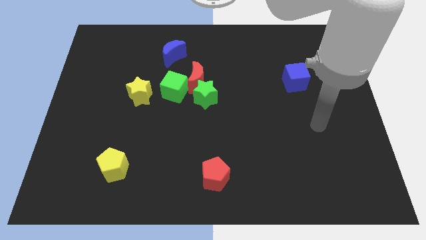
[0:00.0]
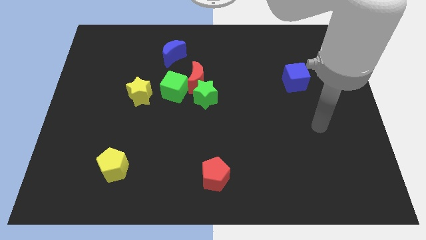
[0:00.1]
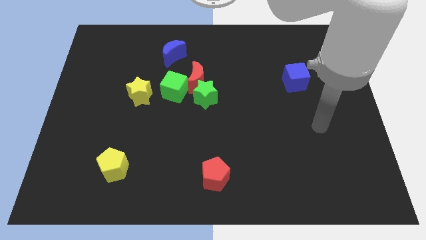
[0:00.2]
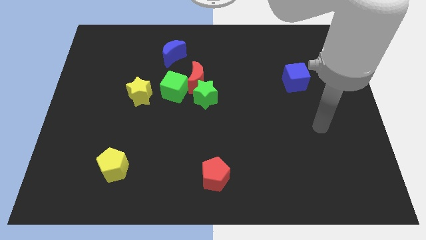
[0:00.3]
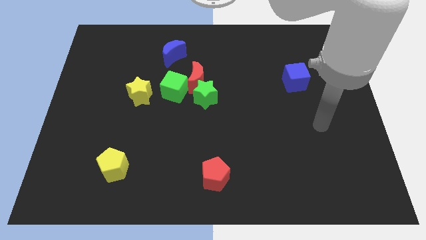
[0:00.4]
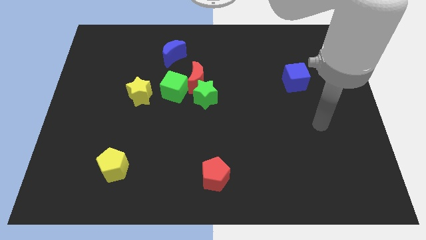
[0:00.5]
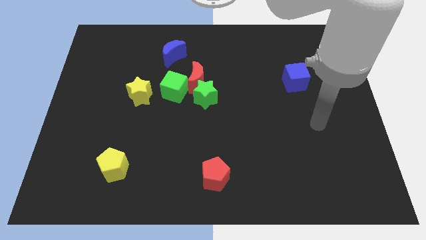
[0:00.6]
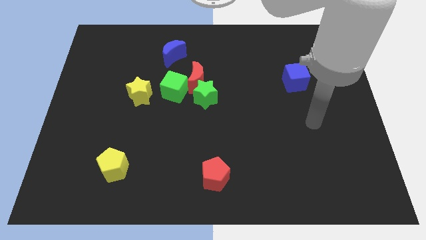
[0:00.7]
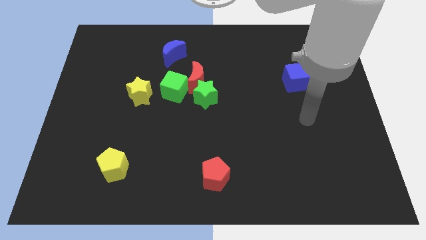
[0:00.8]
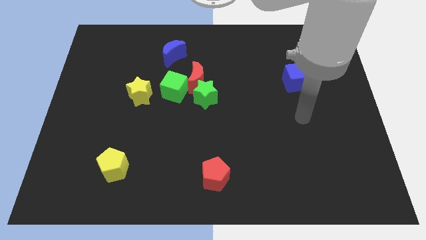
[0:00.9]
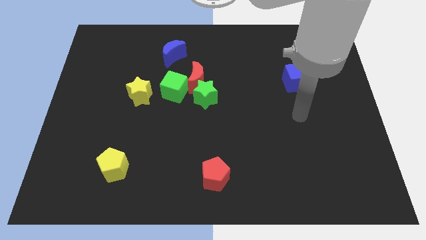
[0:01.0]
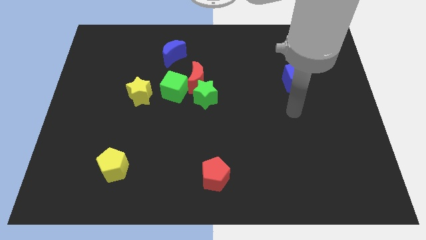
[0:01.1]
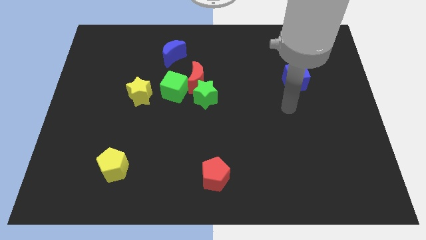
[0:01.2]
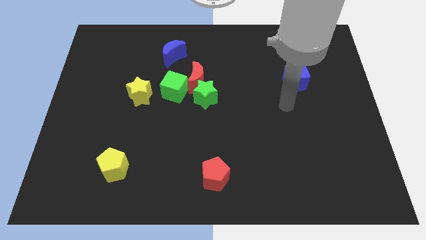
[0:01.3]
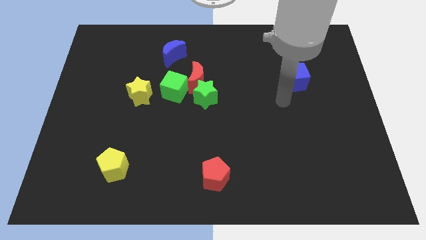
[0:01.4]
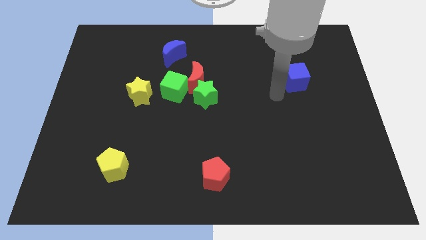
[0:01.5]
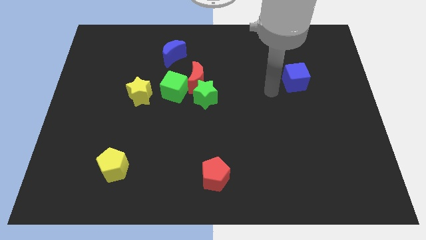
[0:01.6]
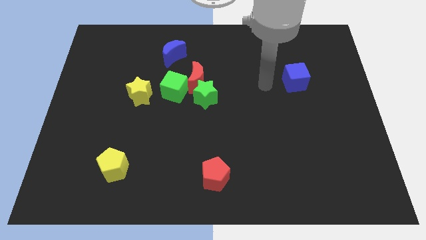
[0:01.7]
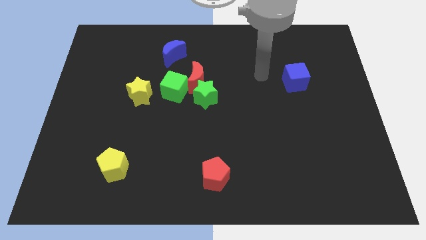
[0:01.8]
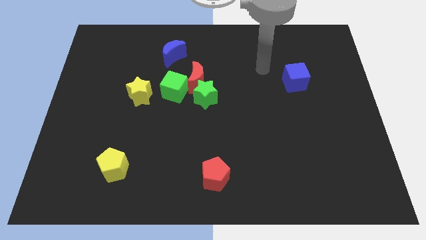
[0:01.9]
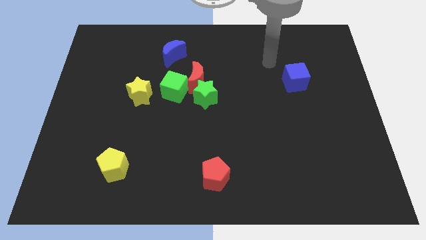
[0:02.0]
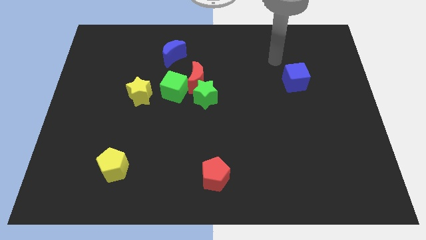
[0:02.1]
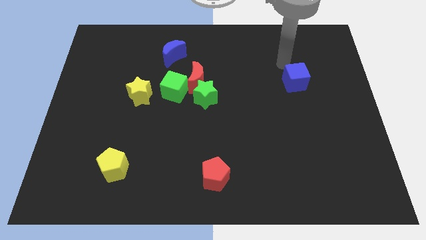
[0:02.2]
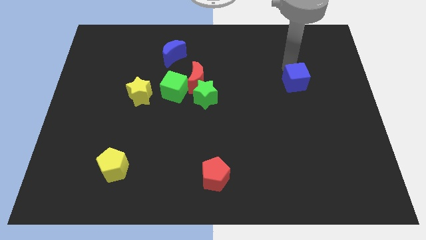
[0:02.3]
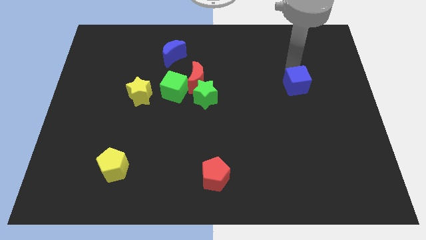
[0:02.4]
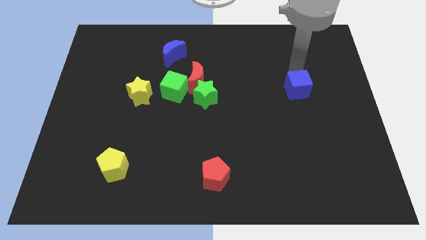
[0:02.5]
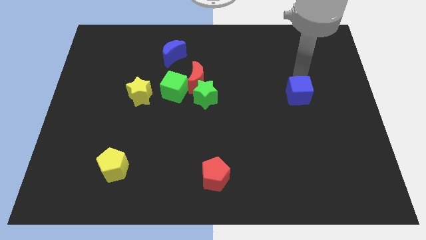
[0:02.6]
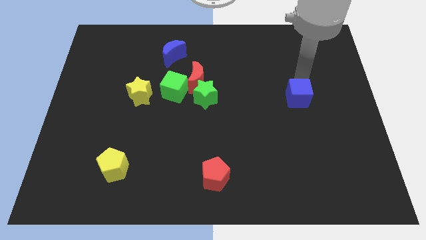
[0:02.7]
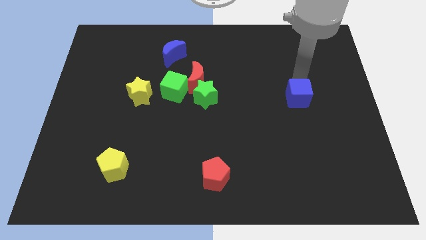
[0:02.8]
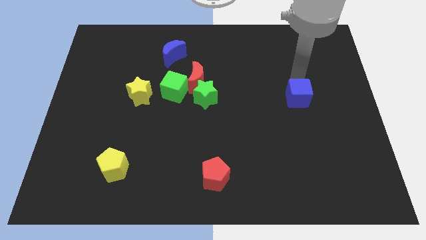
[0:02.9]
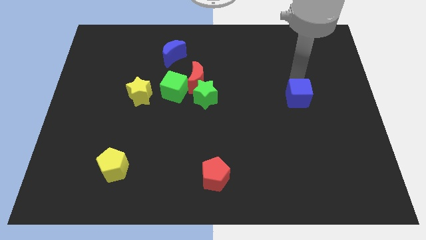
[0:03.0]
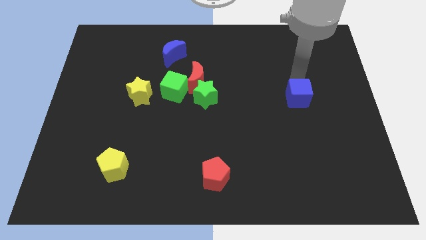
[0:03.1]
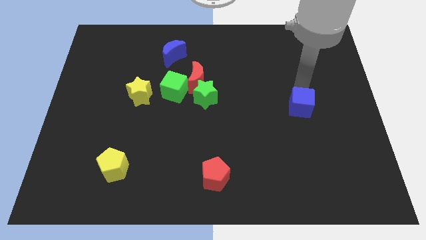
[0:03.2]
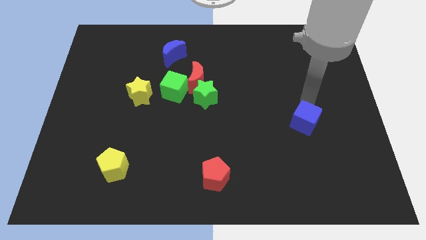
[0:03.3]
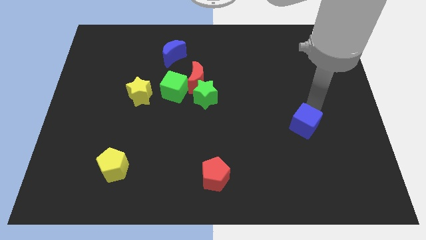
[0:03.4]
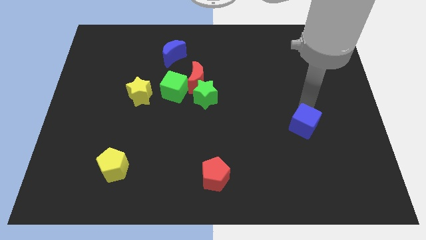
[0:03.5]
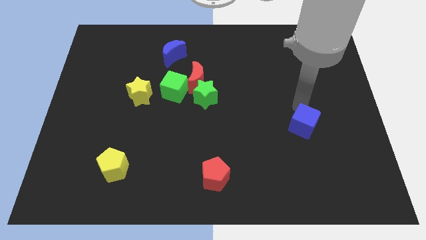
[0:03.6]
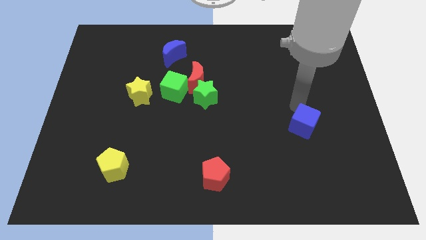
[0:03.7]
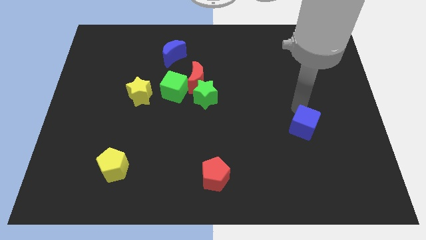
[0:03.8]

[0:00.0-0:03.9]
slightly push the blue cube towards the bottom of the board

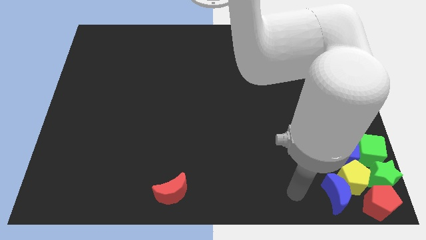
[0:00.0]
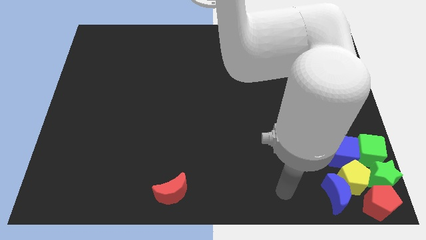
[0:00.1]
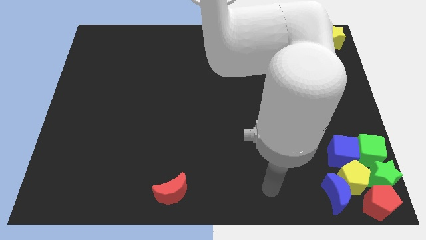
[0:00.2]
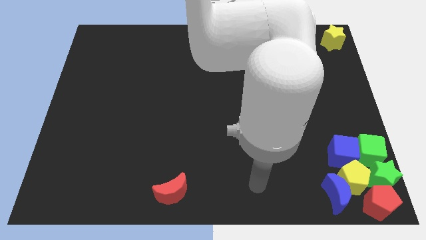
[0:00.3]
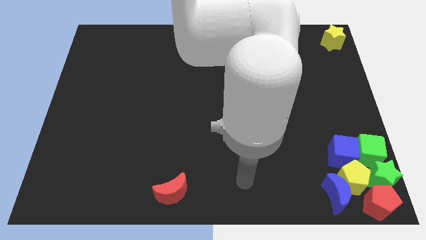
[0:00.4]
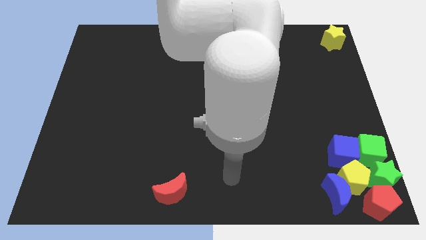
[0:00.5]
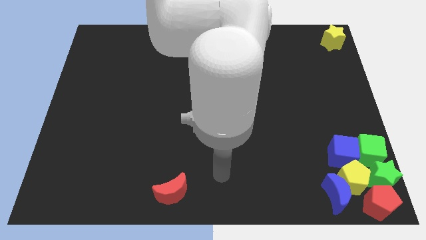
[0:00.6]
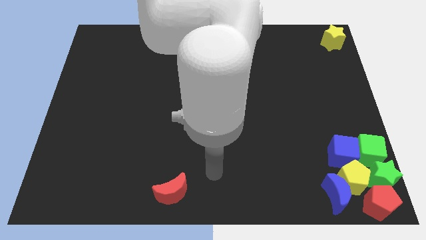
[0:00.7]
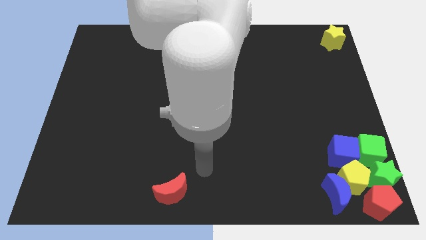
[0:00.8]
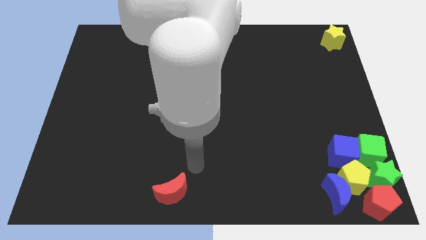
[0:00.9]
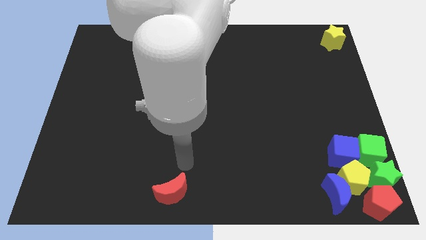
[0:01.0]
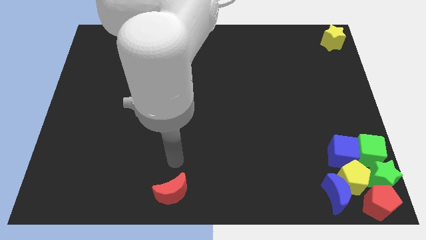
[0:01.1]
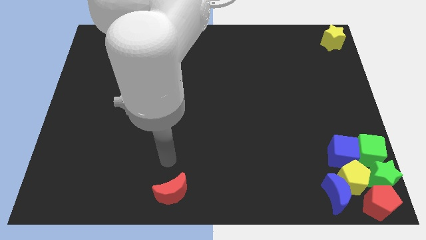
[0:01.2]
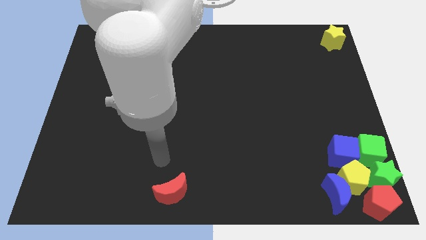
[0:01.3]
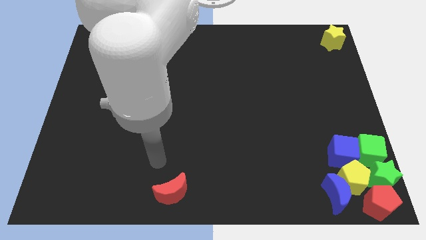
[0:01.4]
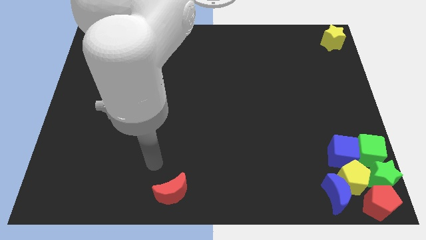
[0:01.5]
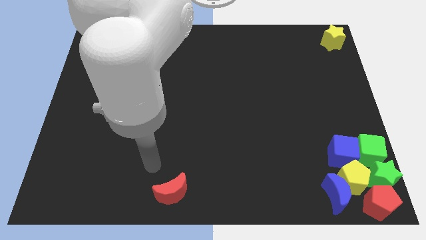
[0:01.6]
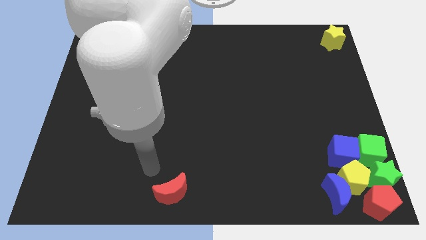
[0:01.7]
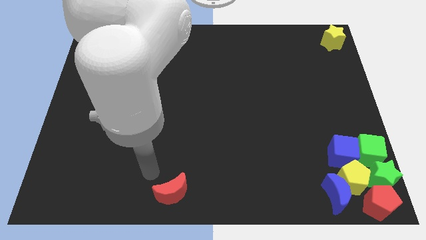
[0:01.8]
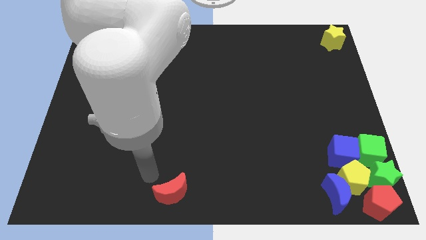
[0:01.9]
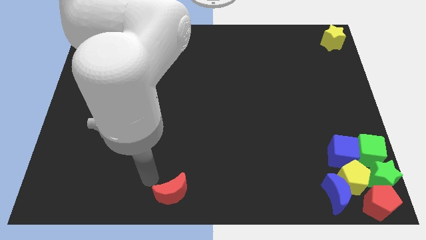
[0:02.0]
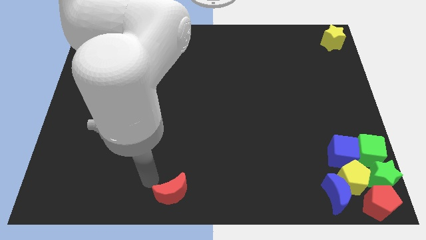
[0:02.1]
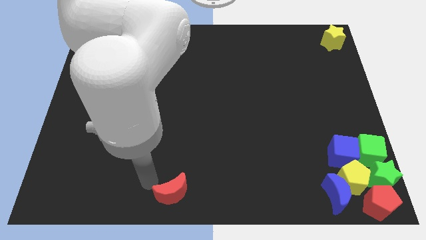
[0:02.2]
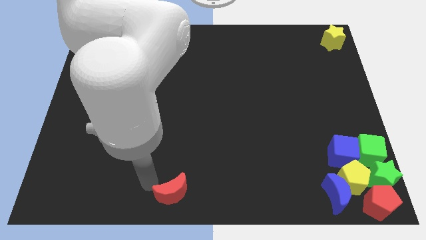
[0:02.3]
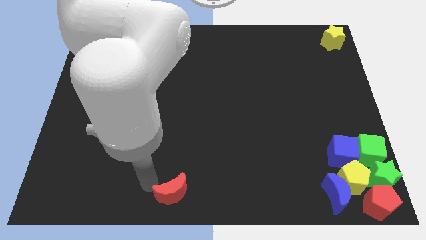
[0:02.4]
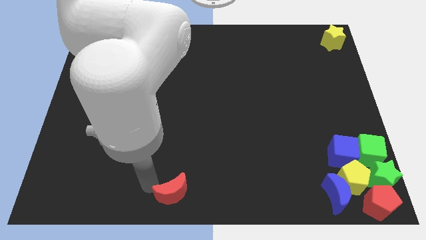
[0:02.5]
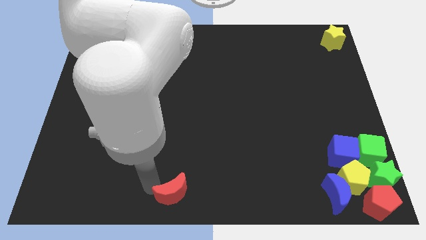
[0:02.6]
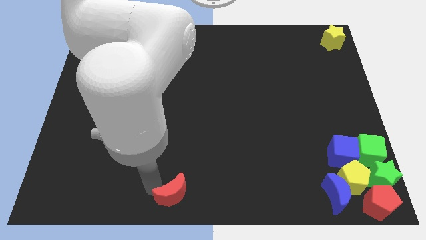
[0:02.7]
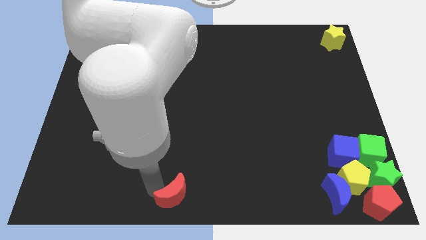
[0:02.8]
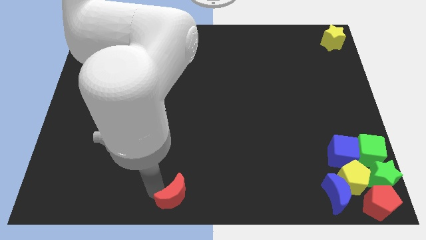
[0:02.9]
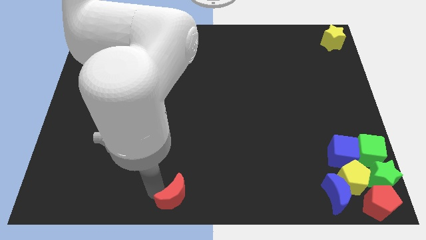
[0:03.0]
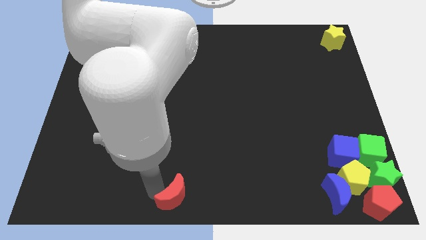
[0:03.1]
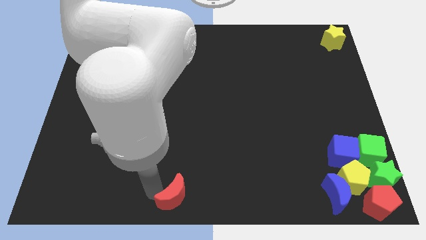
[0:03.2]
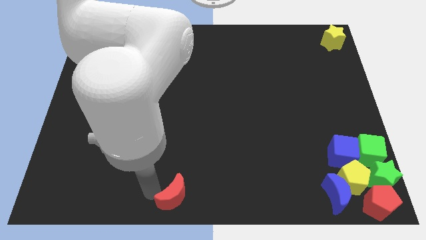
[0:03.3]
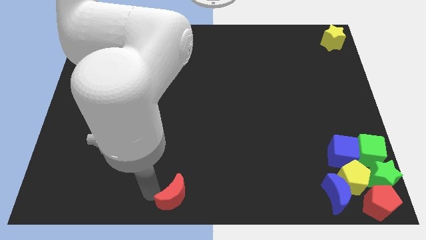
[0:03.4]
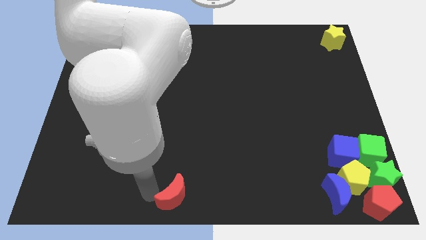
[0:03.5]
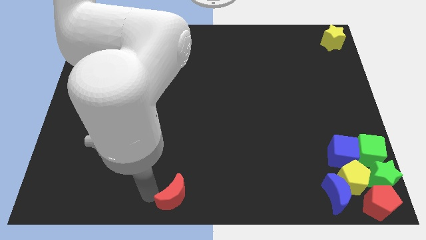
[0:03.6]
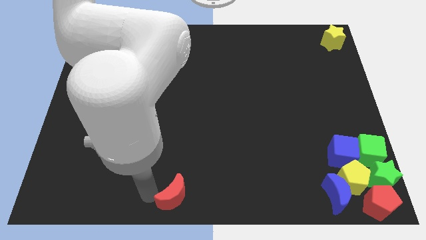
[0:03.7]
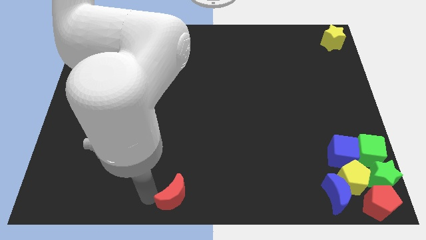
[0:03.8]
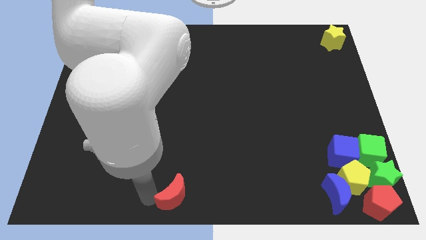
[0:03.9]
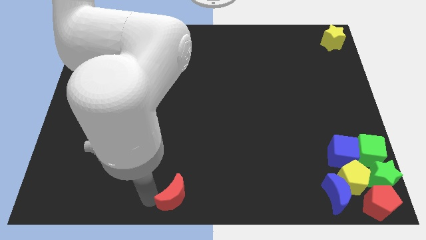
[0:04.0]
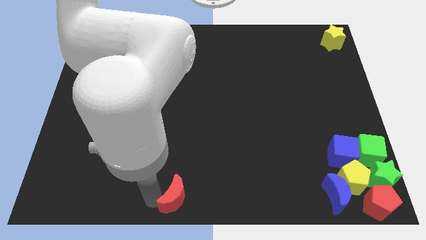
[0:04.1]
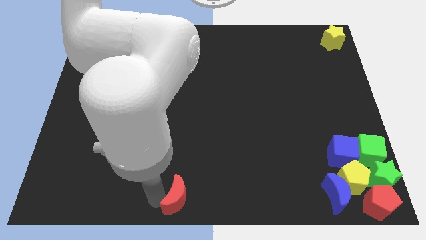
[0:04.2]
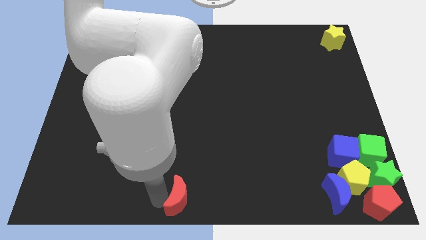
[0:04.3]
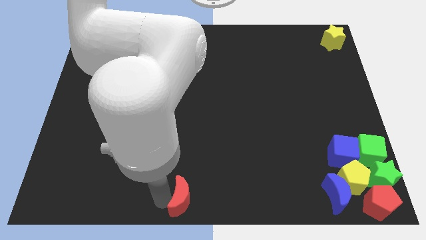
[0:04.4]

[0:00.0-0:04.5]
slightly push the red moon at the bottom center

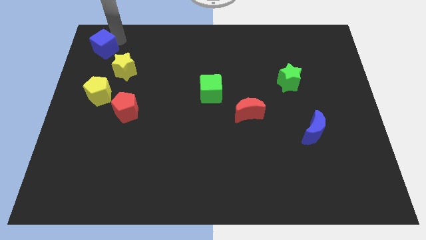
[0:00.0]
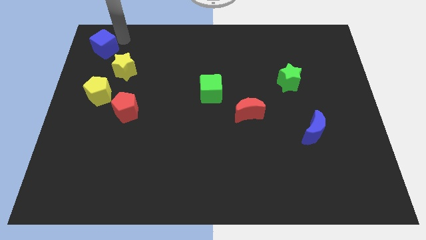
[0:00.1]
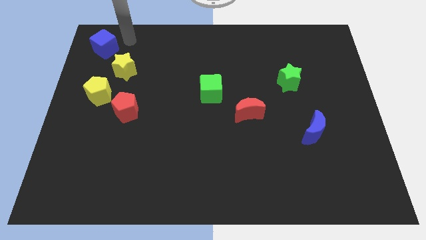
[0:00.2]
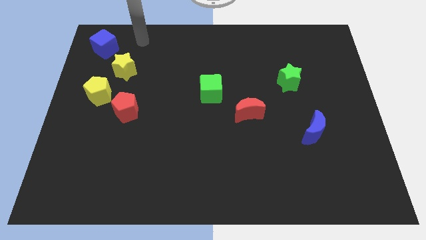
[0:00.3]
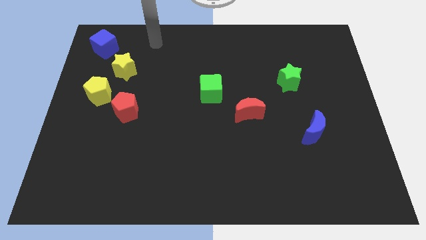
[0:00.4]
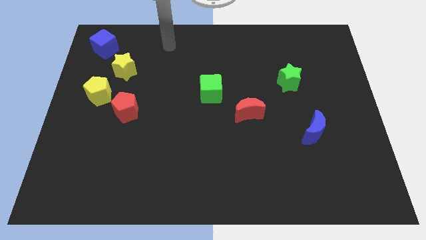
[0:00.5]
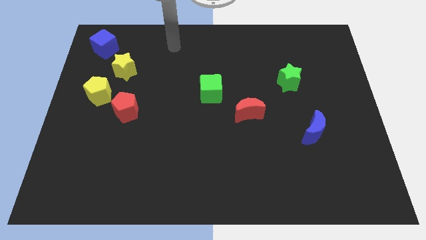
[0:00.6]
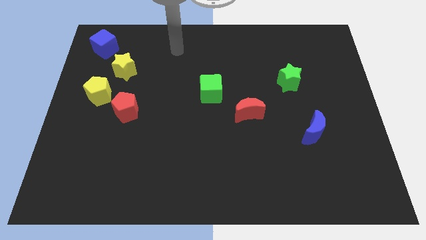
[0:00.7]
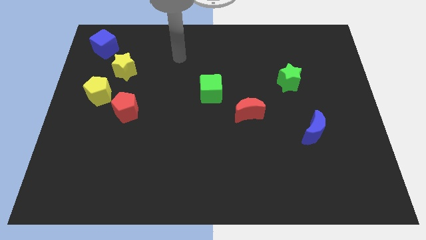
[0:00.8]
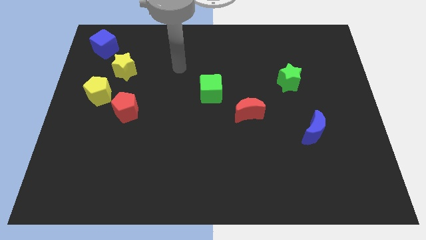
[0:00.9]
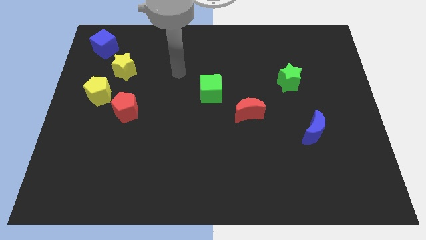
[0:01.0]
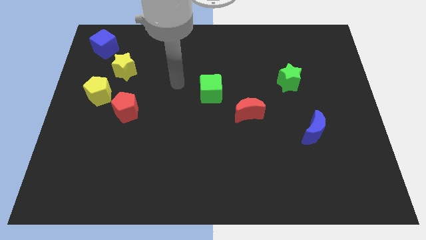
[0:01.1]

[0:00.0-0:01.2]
move your arm away from the blue cube
